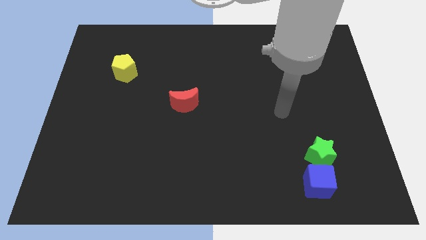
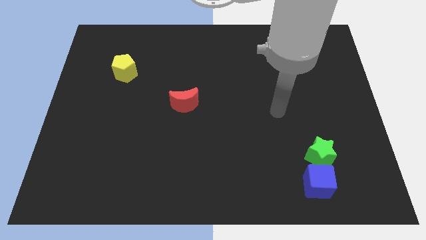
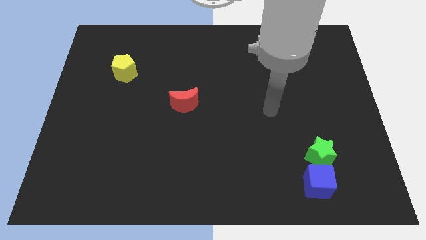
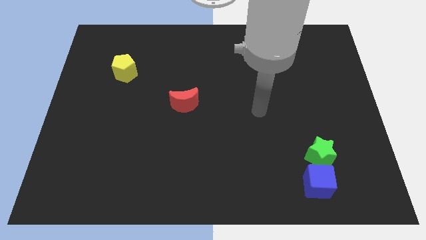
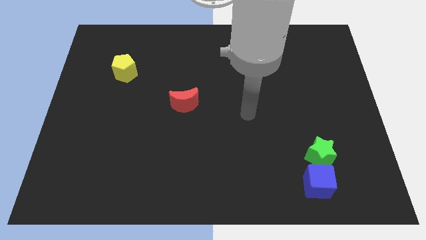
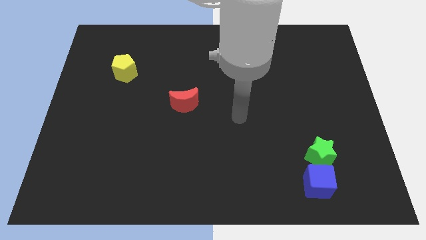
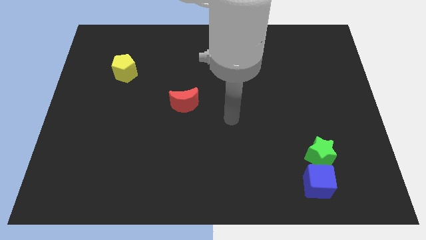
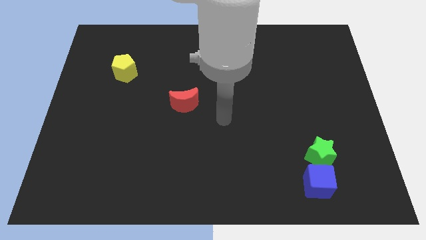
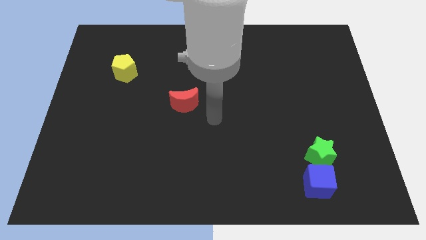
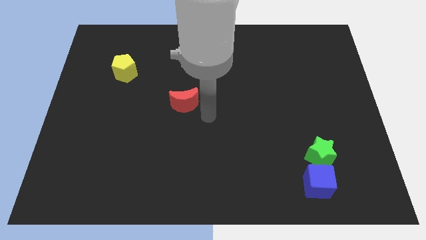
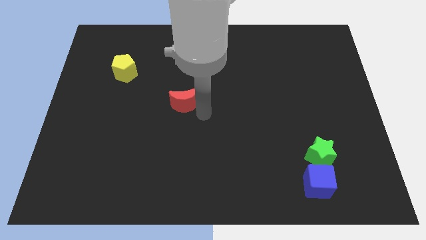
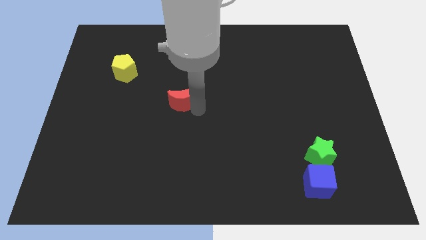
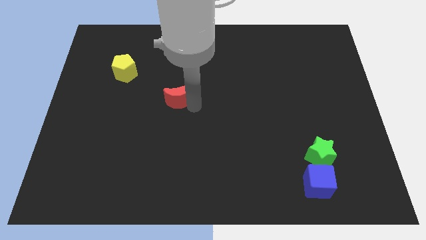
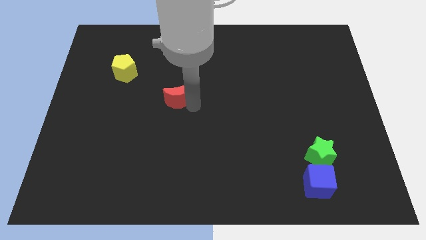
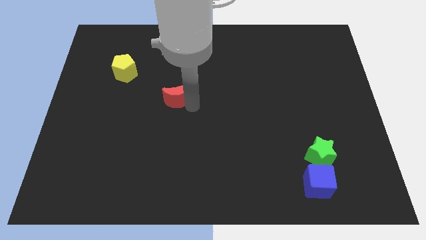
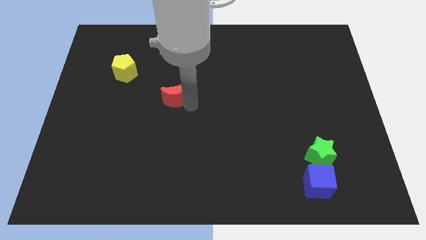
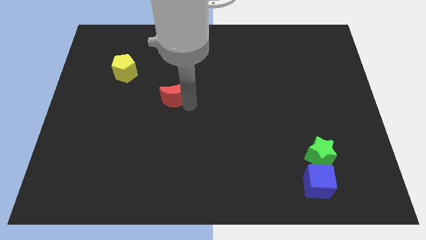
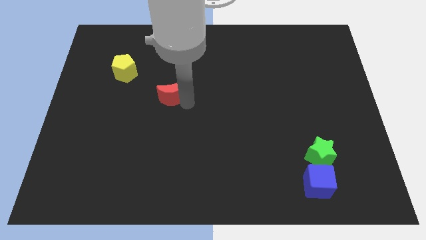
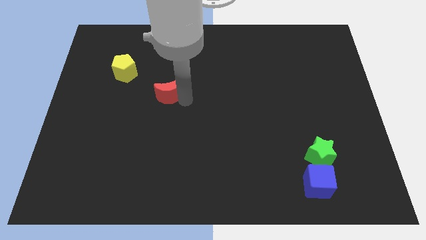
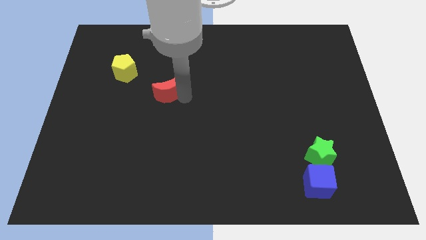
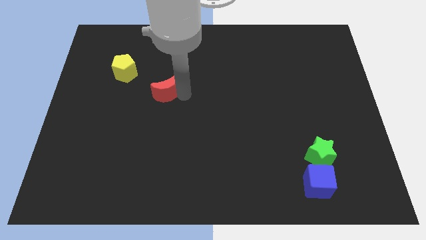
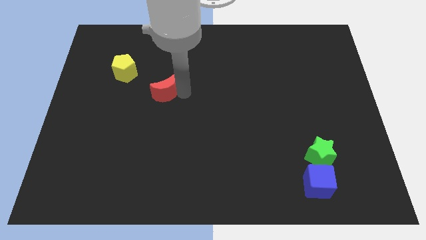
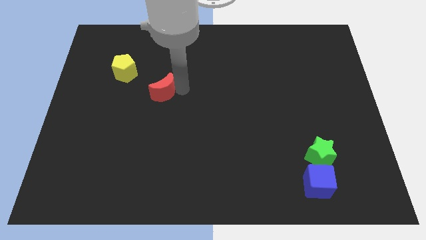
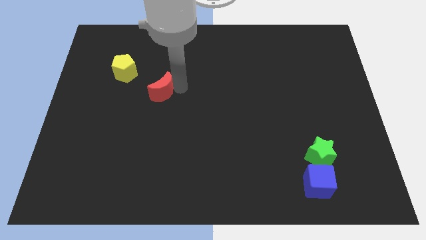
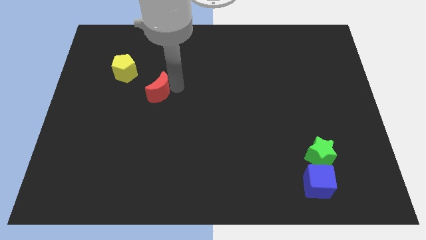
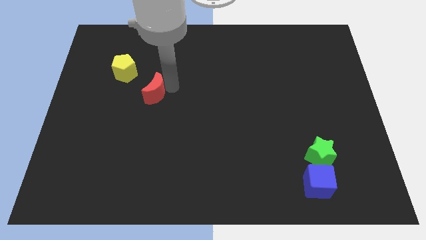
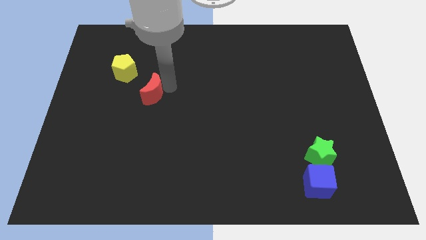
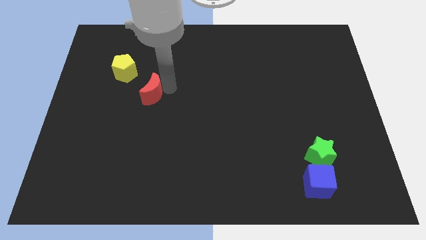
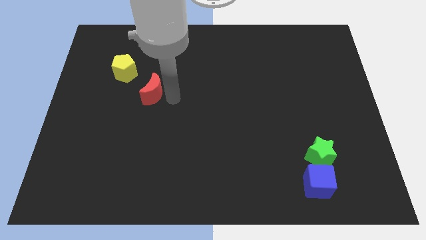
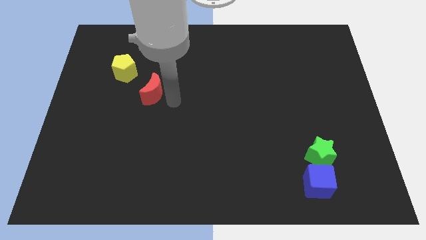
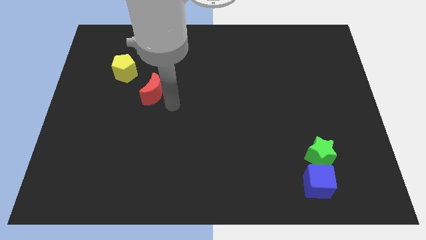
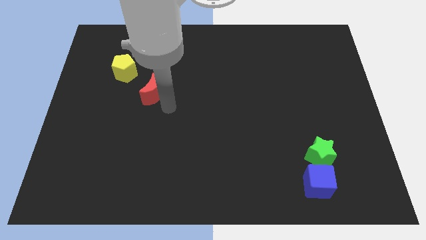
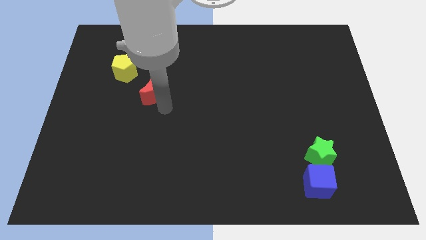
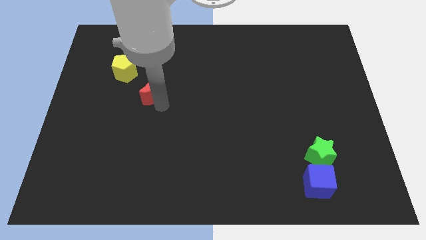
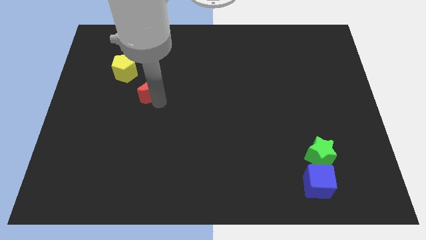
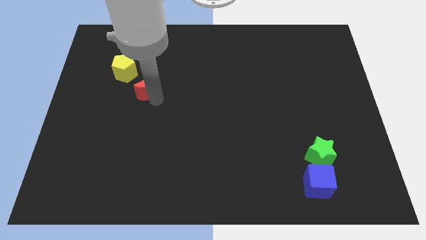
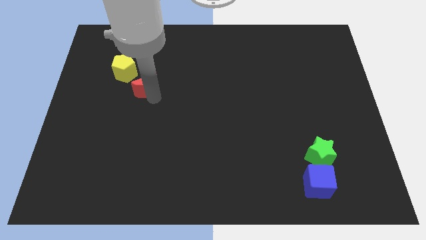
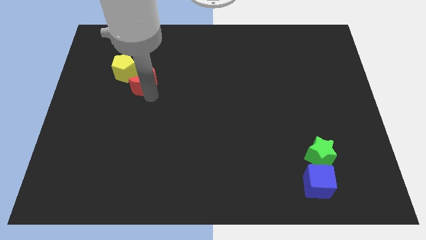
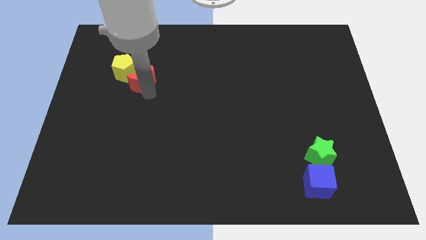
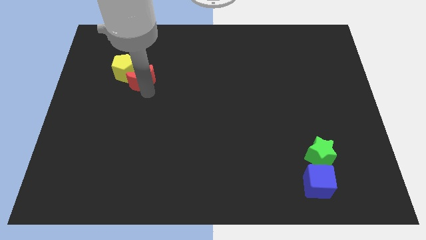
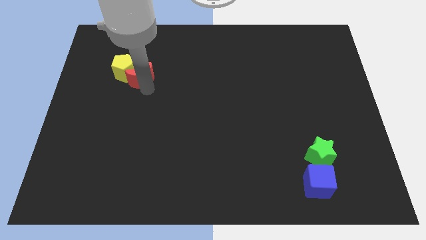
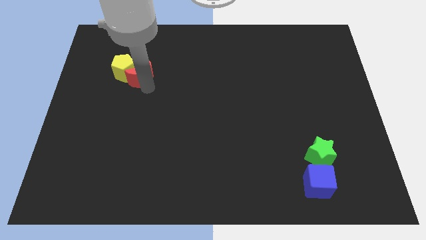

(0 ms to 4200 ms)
push the moon to the yellow pentagon

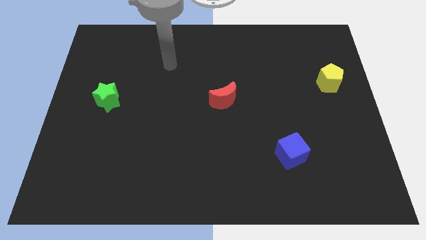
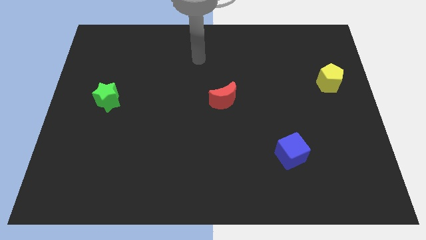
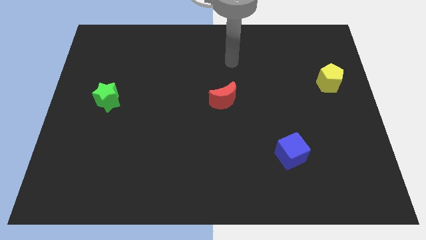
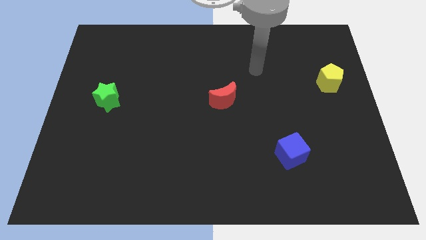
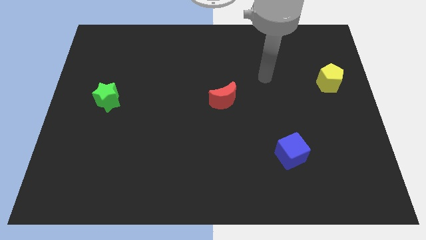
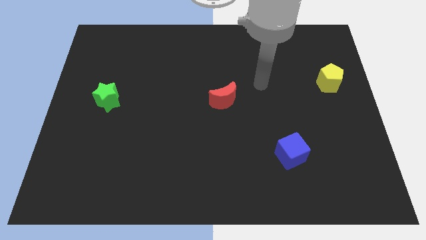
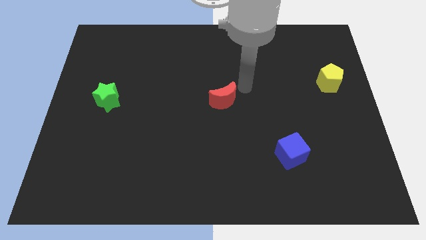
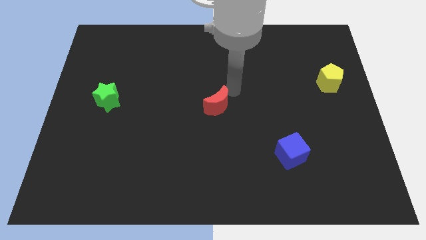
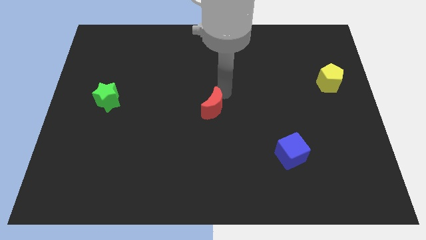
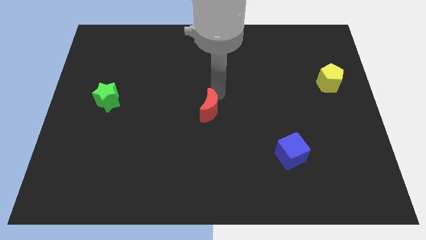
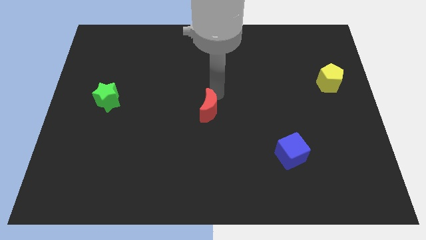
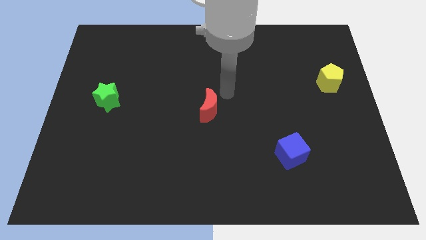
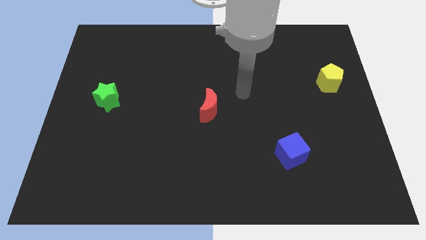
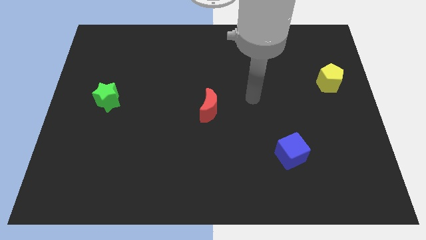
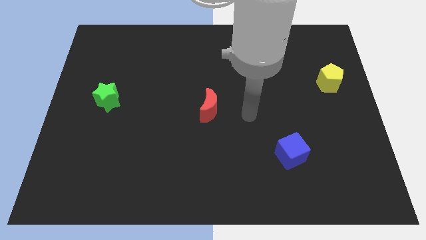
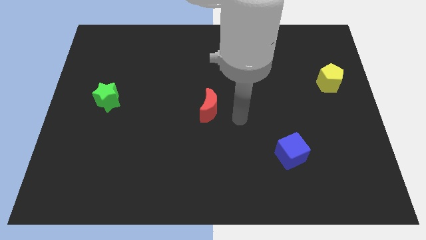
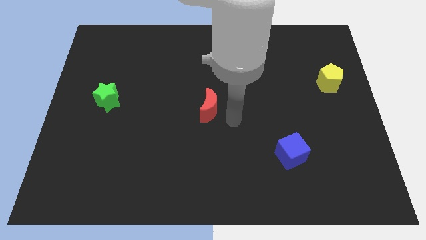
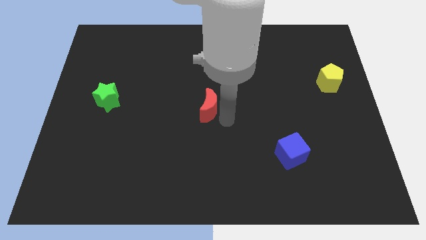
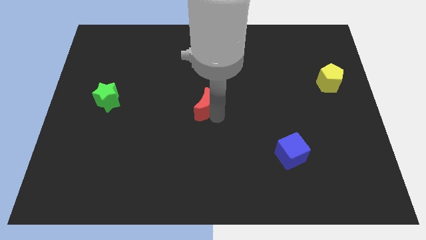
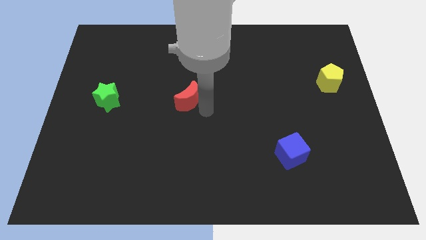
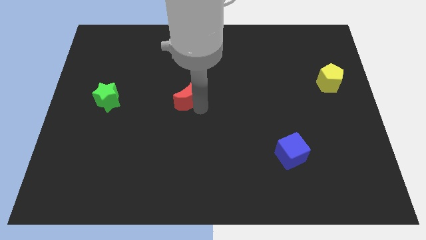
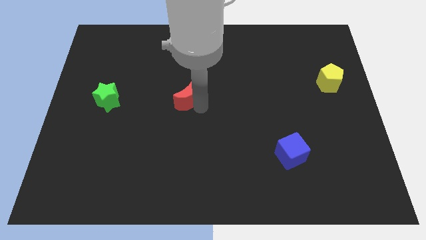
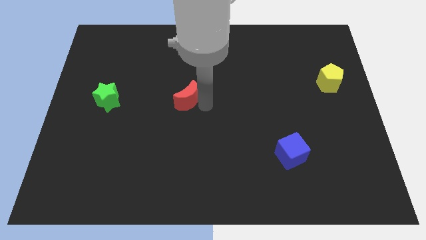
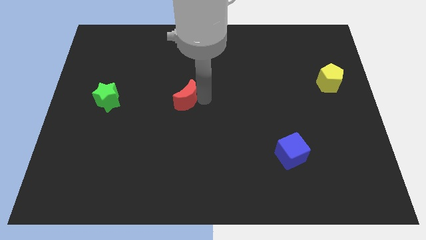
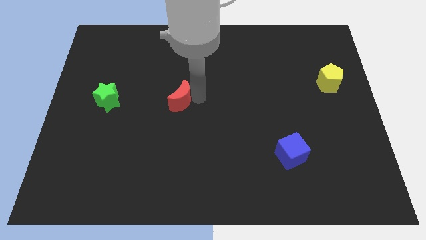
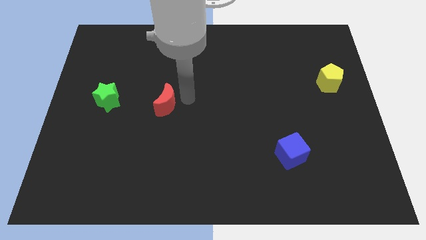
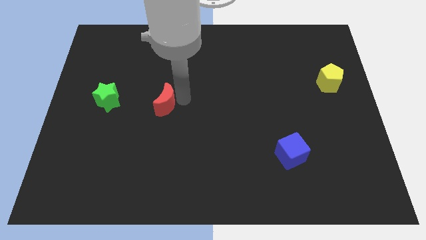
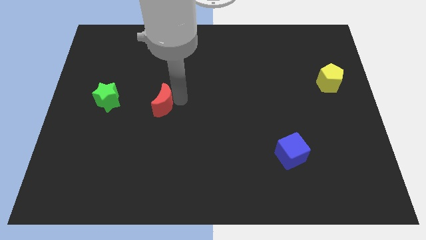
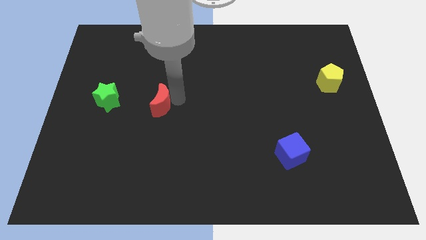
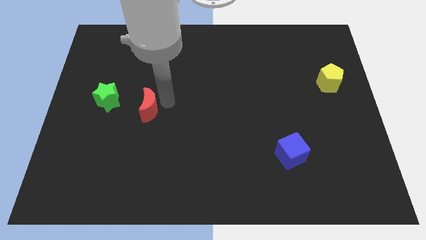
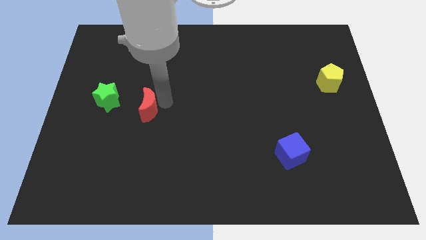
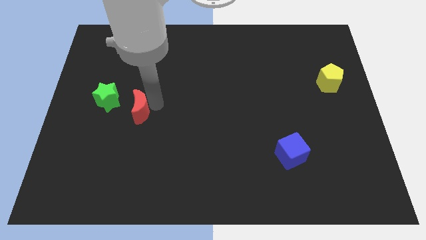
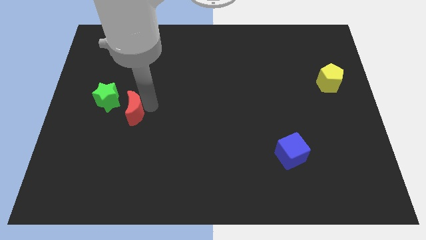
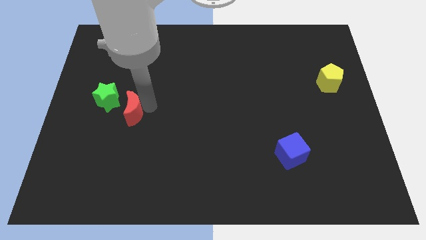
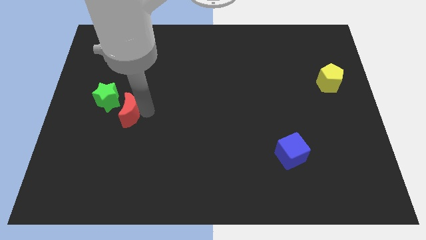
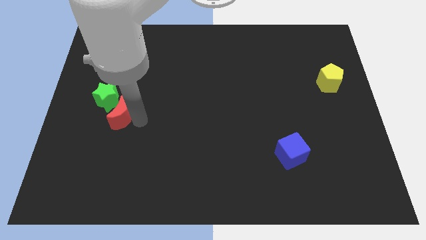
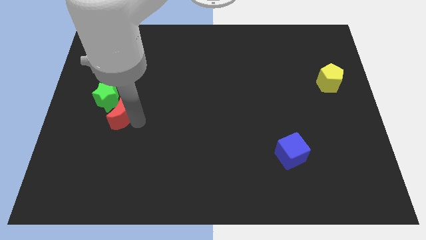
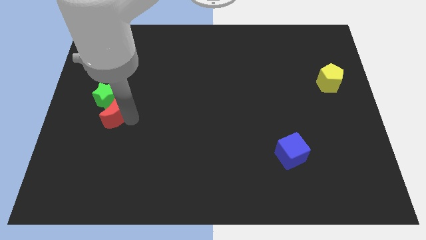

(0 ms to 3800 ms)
push the red block next to the star

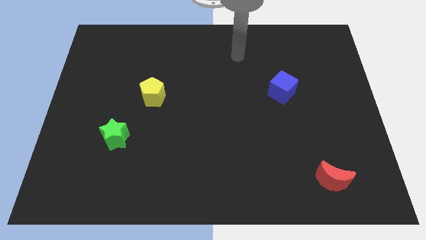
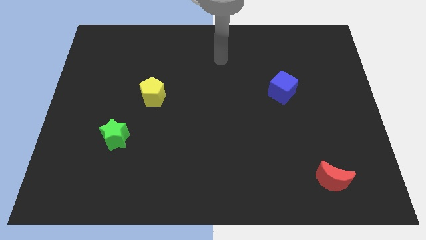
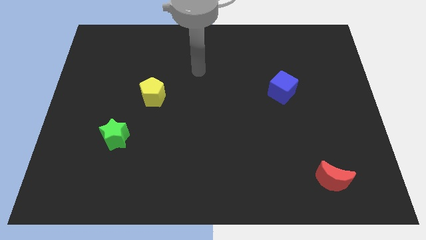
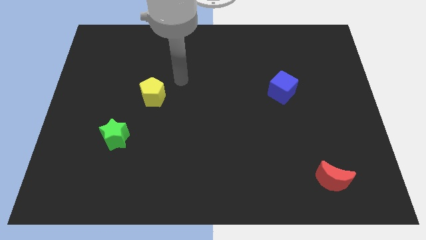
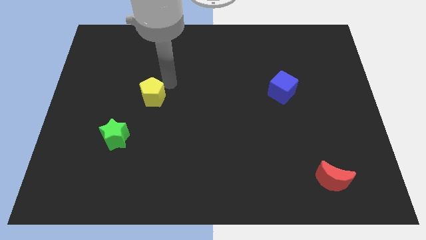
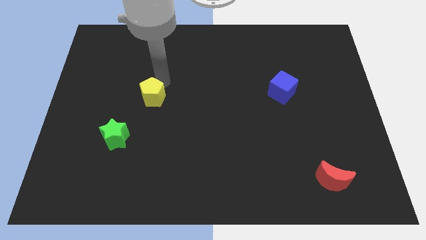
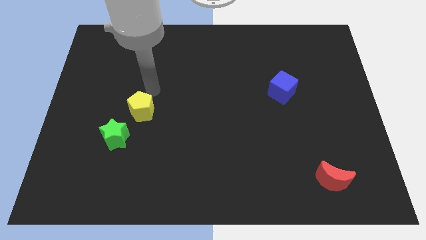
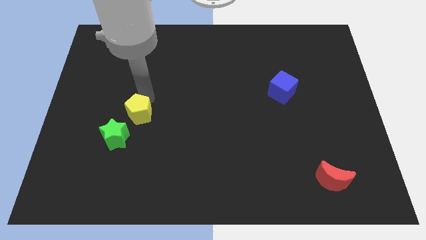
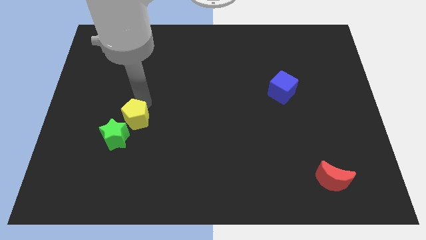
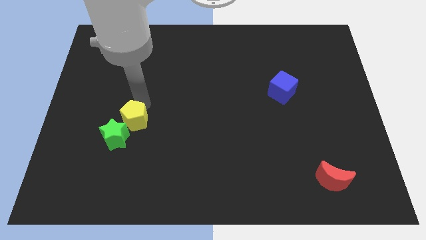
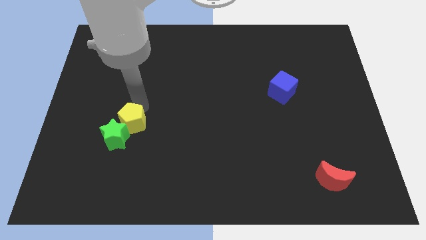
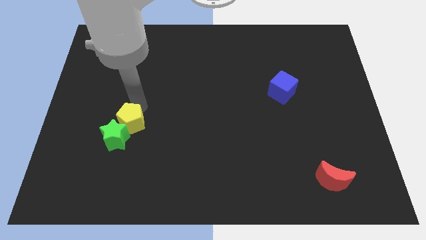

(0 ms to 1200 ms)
push the pentagon towards the green block
